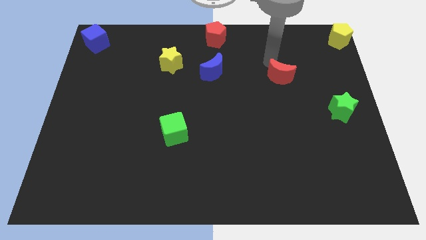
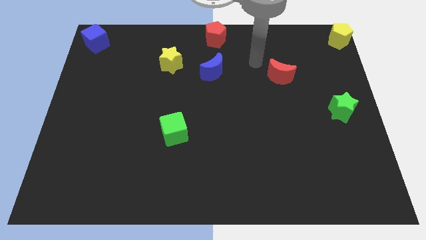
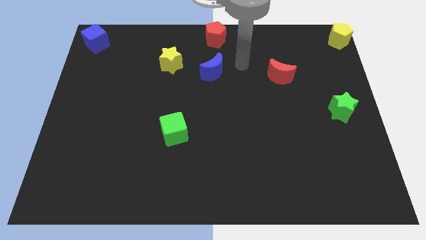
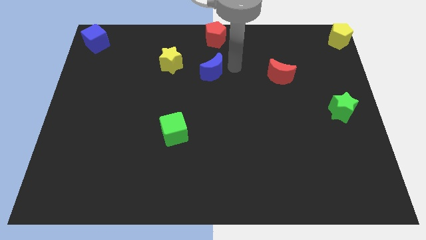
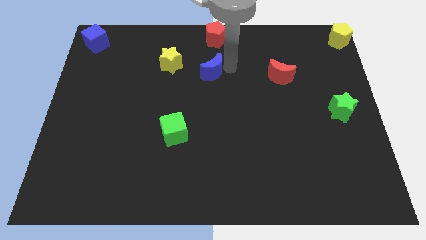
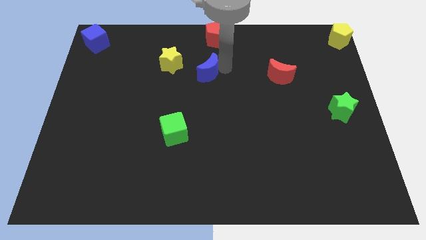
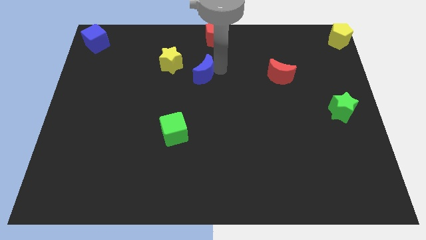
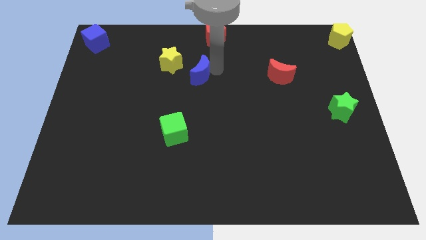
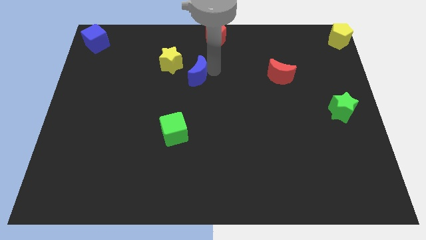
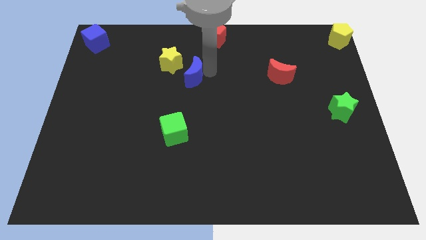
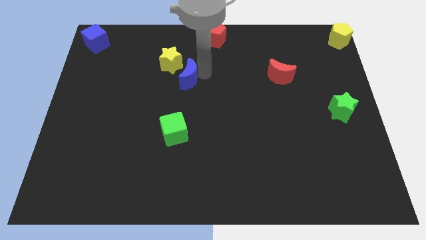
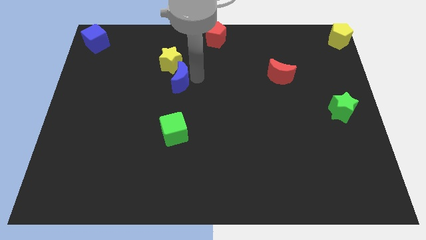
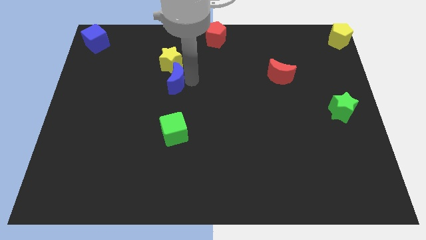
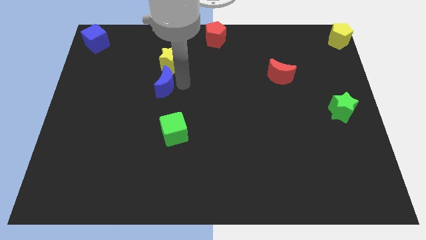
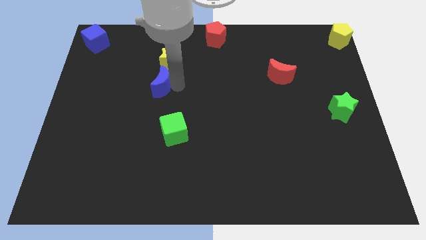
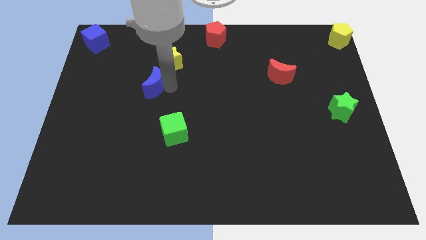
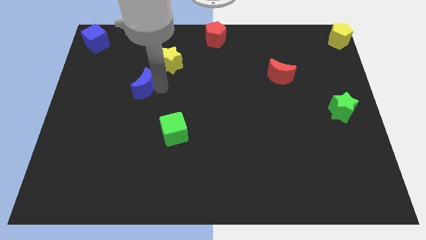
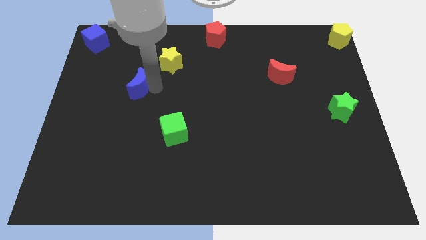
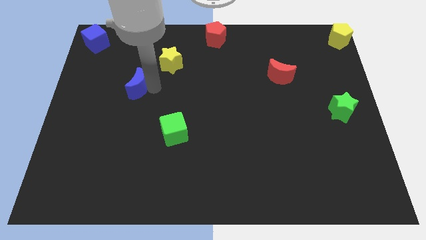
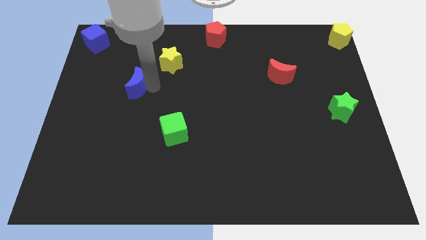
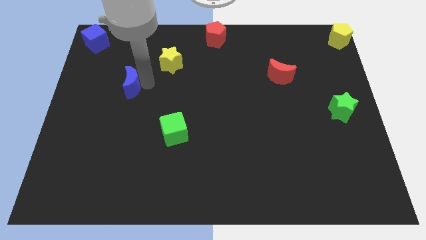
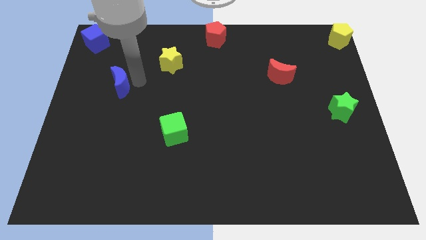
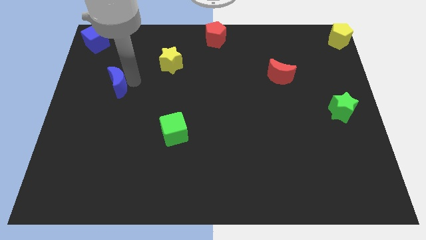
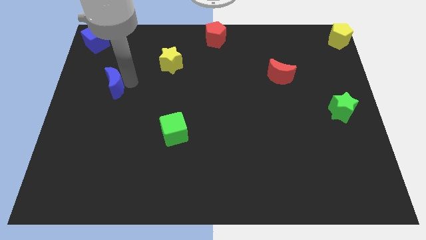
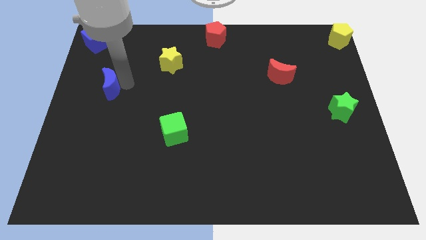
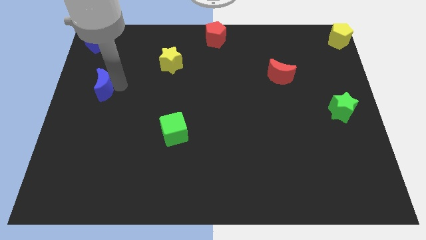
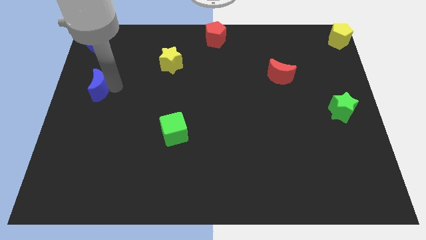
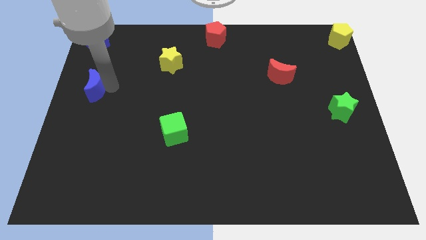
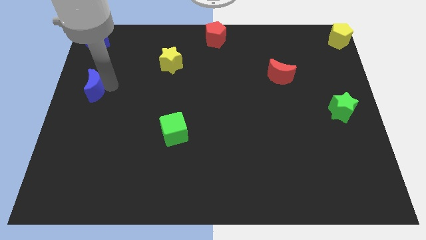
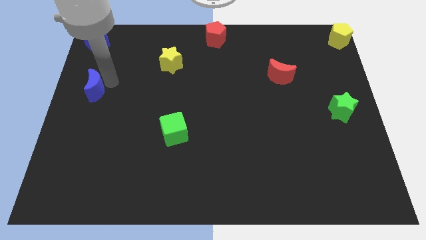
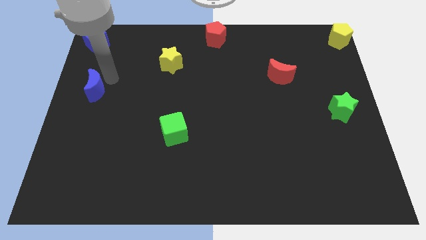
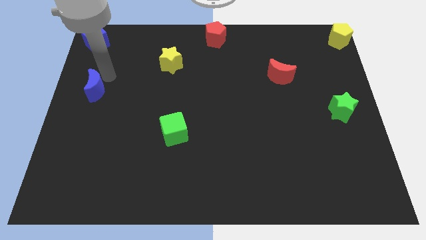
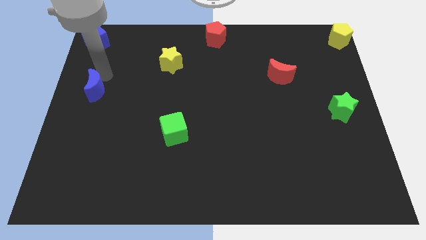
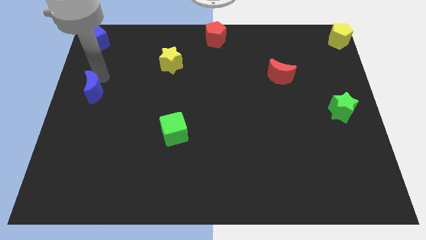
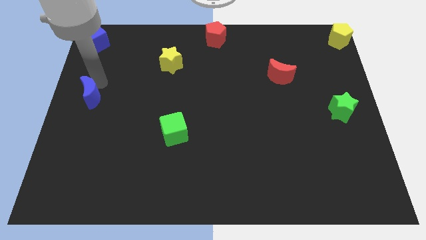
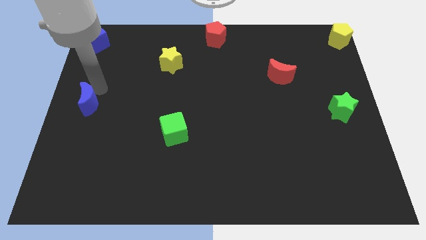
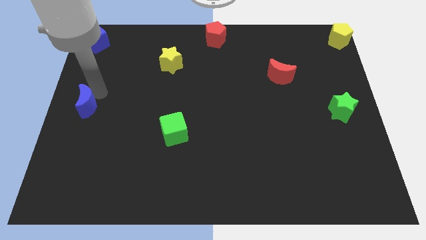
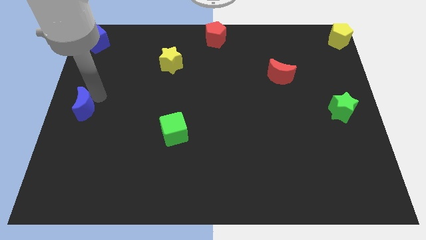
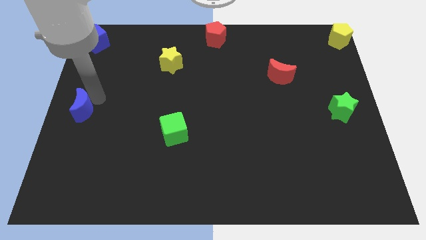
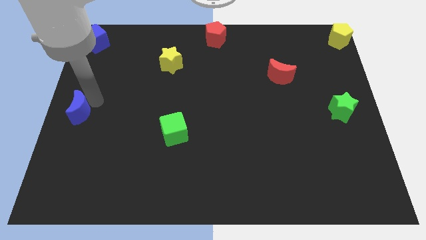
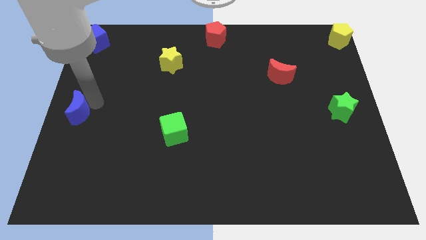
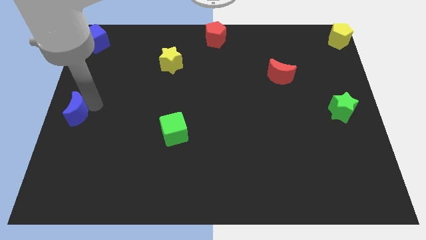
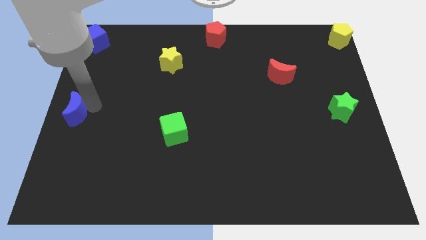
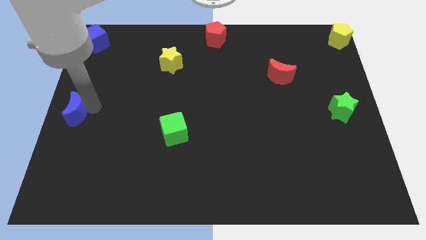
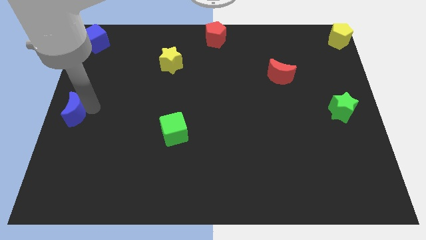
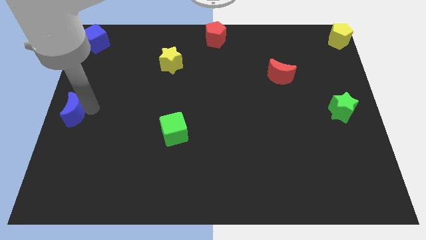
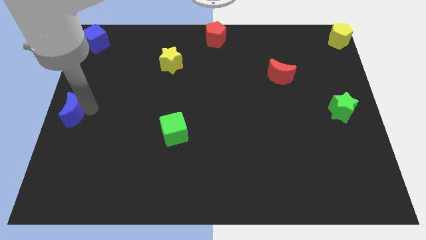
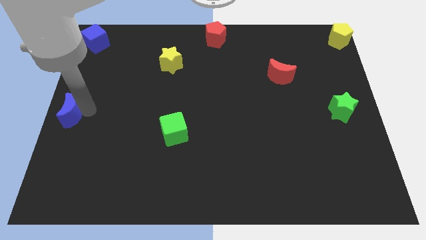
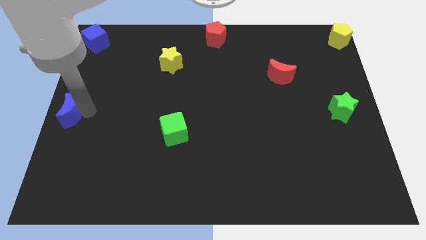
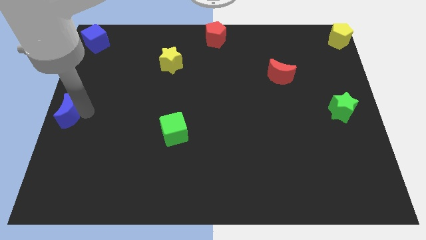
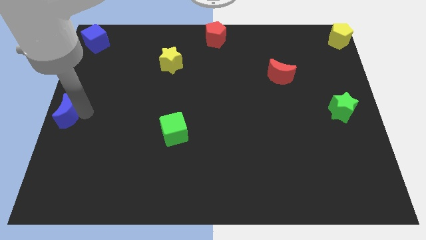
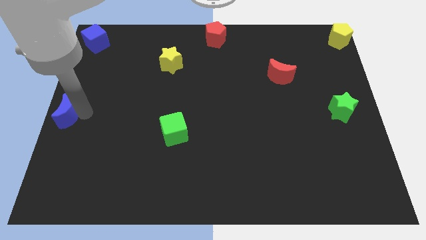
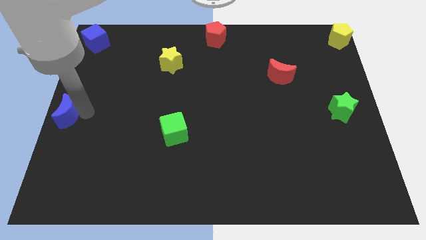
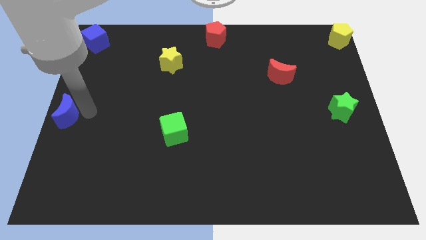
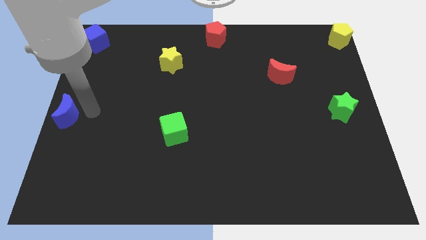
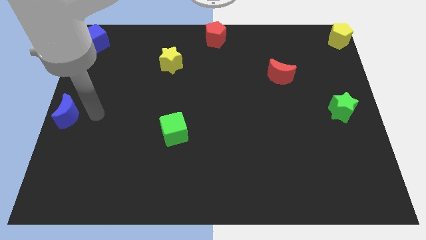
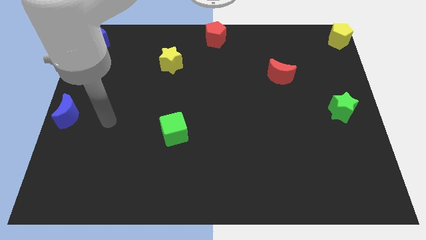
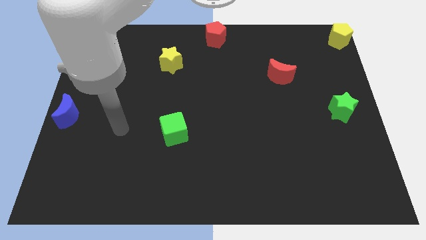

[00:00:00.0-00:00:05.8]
move blue moon to left center of the board

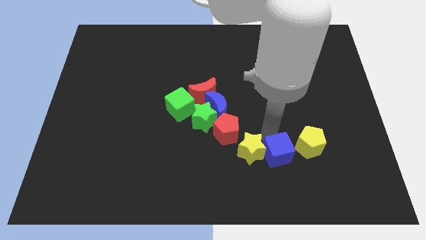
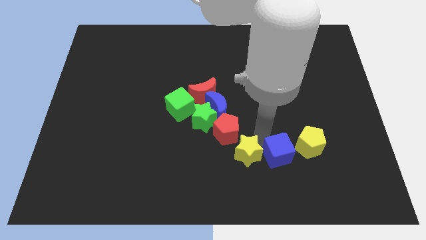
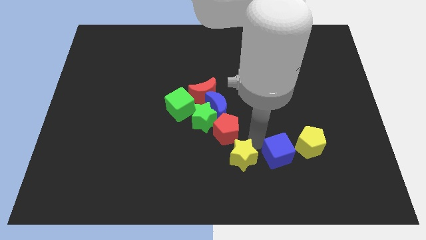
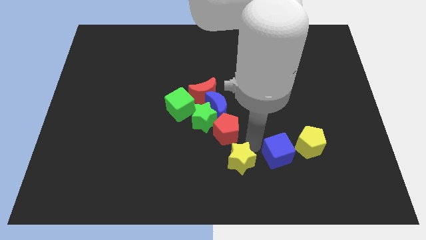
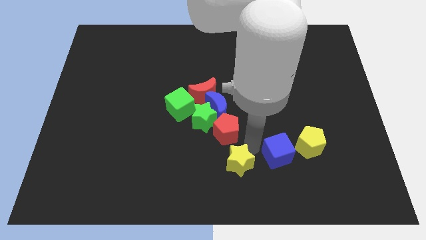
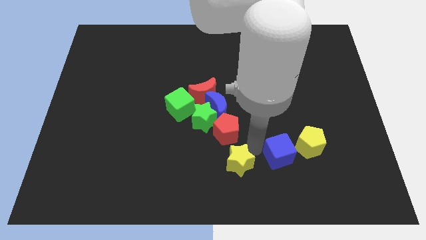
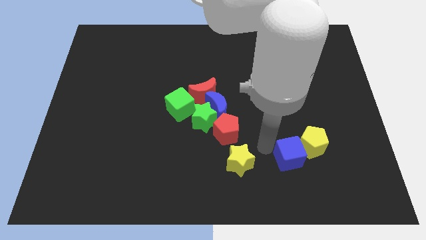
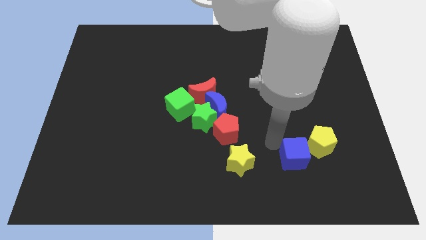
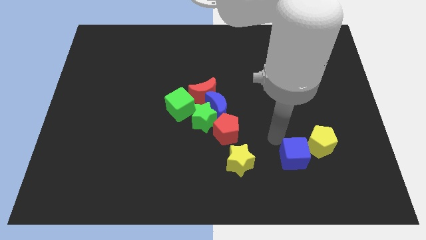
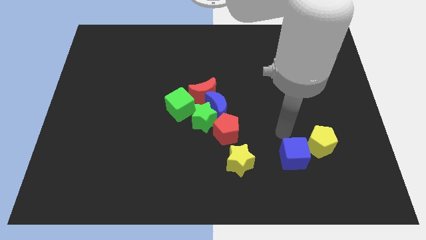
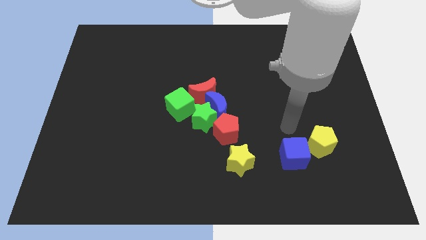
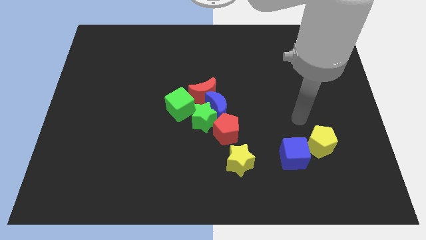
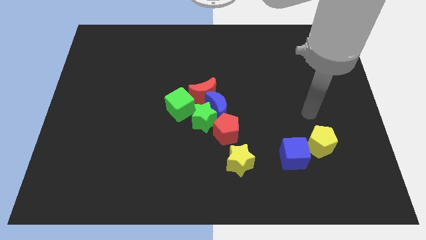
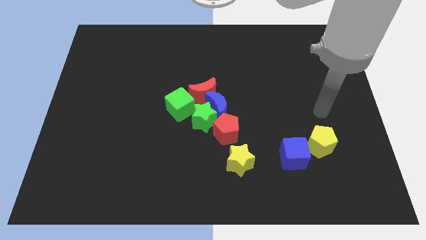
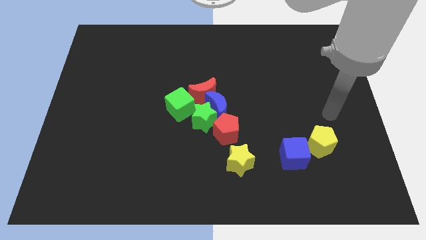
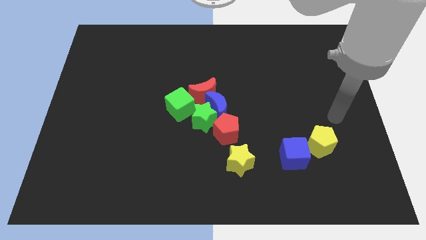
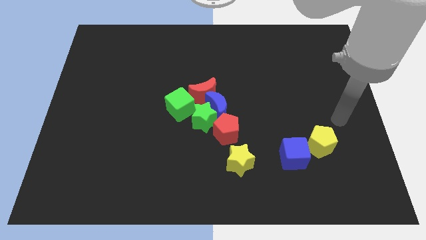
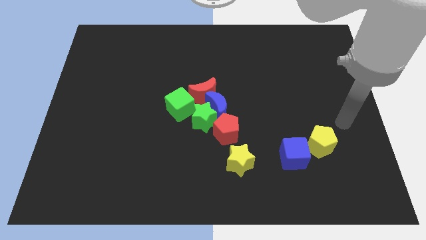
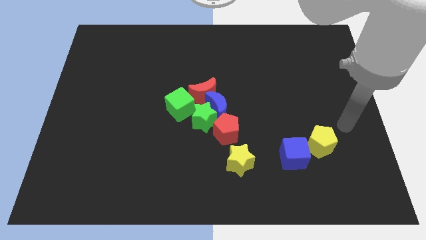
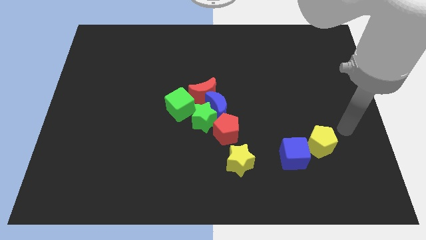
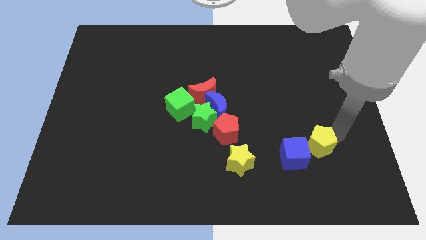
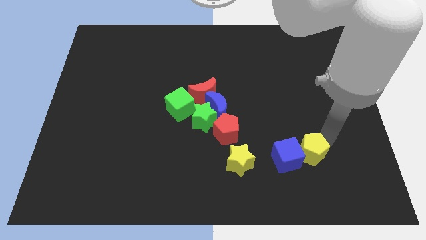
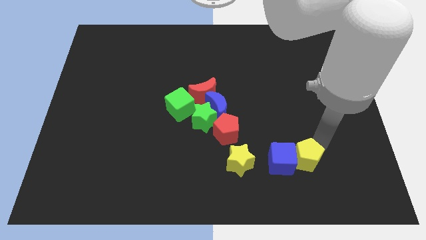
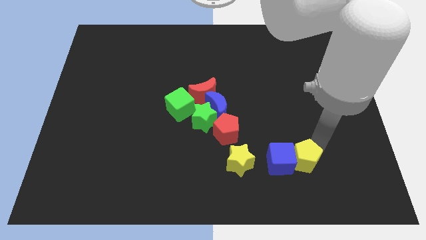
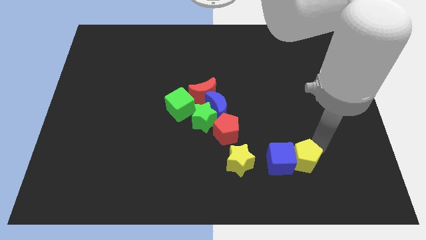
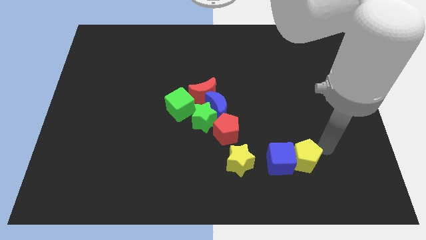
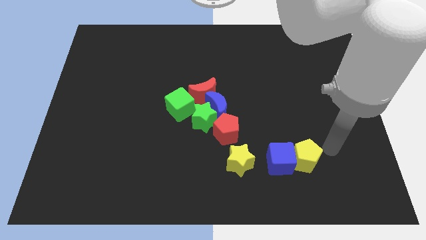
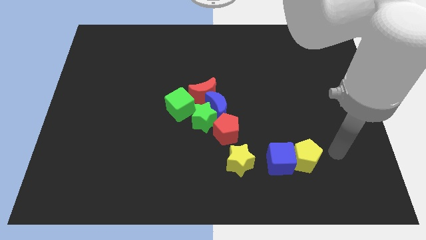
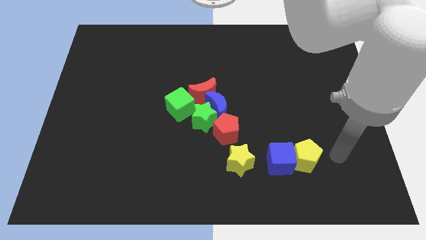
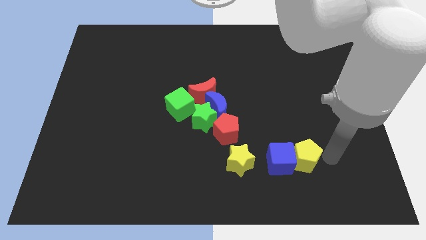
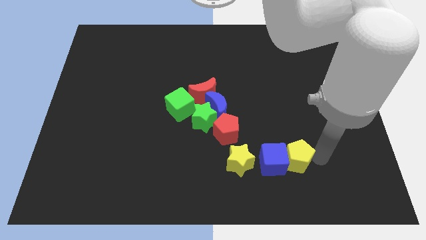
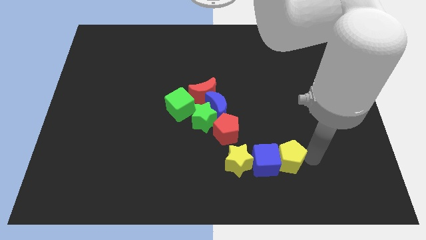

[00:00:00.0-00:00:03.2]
separate yellow star from blue cube
